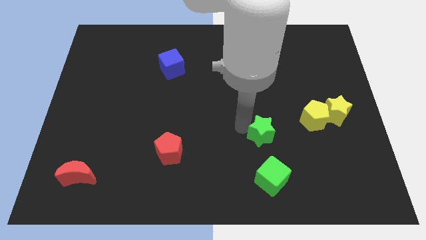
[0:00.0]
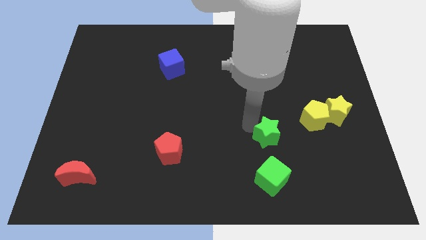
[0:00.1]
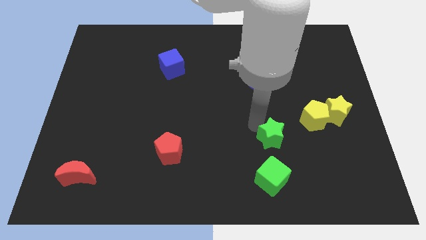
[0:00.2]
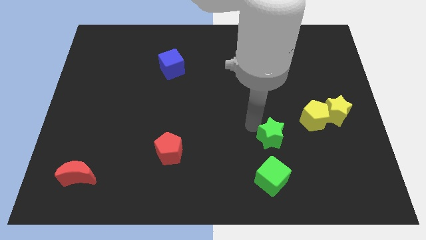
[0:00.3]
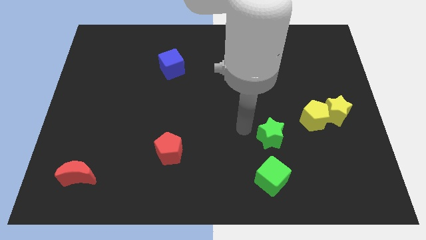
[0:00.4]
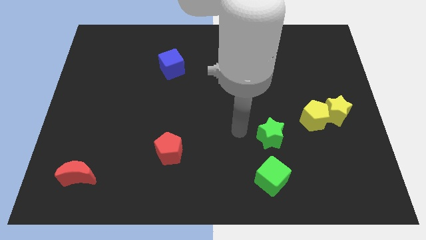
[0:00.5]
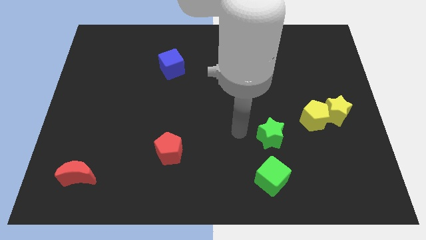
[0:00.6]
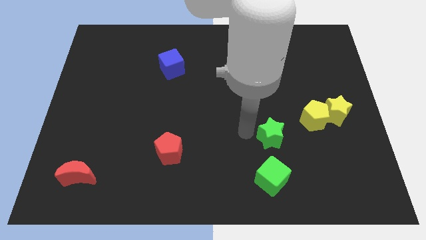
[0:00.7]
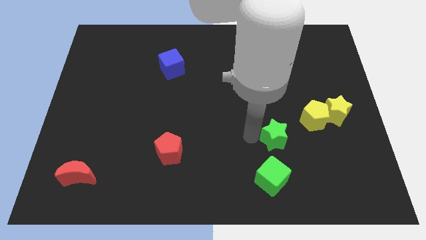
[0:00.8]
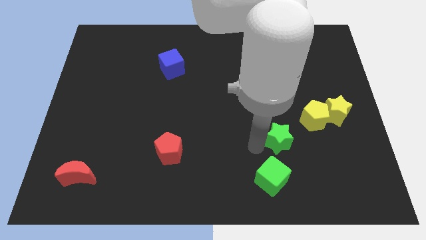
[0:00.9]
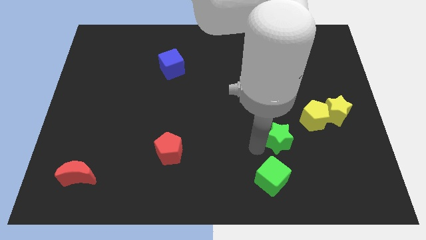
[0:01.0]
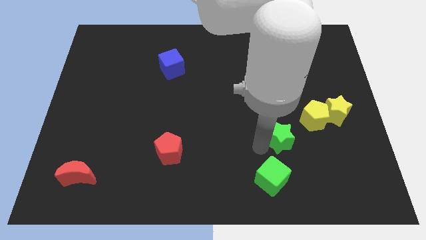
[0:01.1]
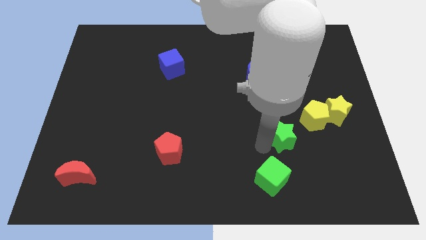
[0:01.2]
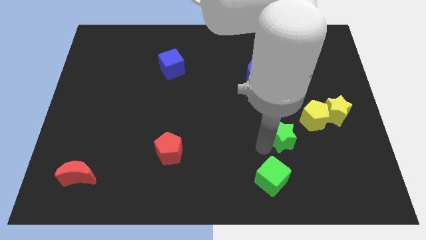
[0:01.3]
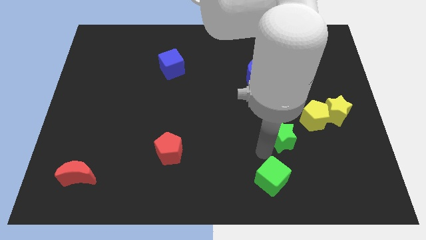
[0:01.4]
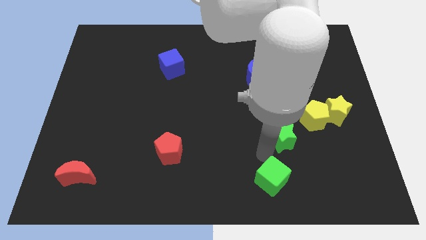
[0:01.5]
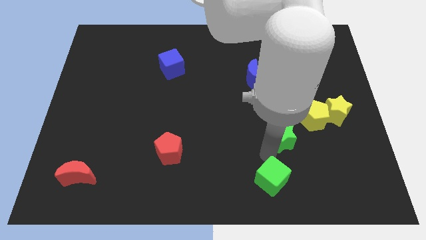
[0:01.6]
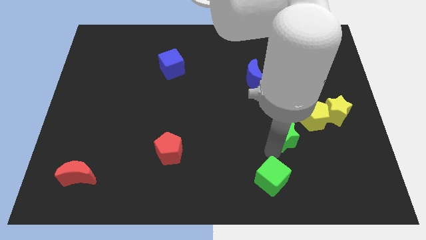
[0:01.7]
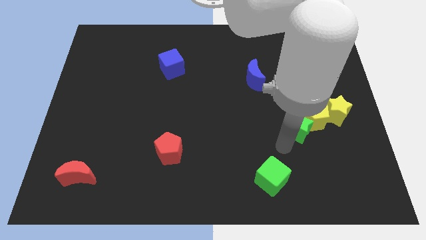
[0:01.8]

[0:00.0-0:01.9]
move green star into the yellow blocks

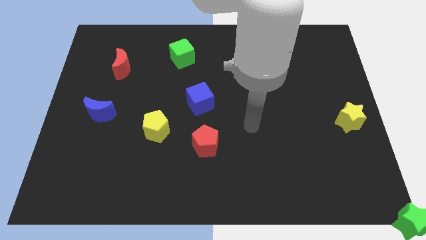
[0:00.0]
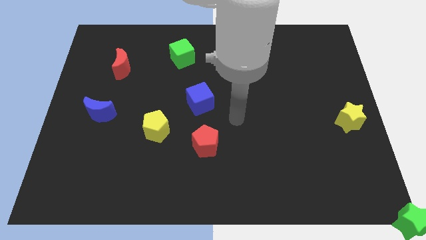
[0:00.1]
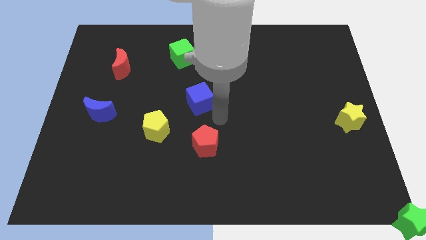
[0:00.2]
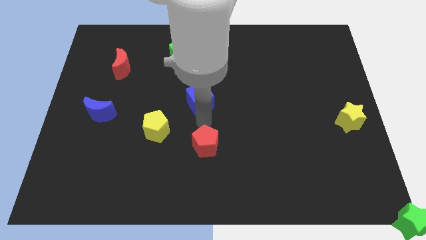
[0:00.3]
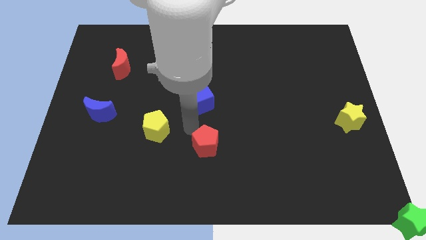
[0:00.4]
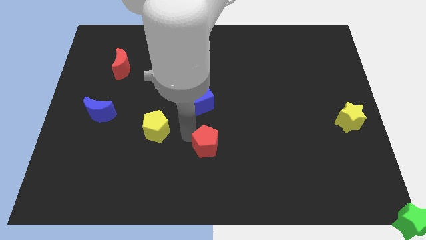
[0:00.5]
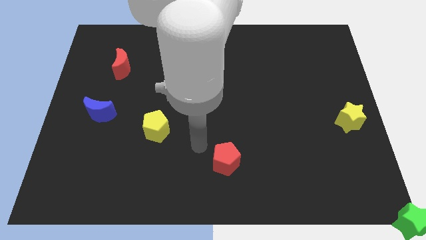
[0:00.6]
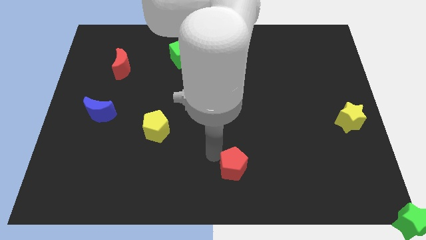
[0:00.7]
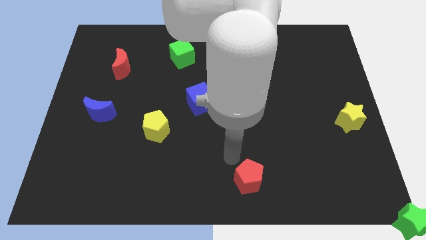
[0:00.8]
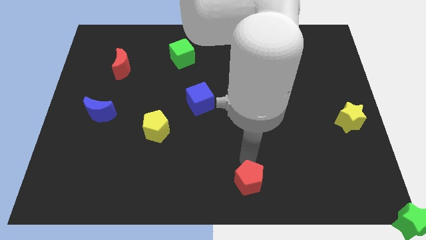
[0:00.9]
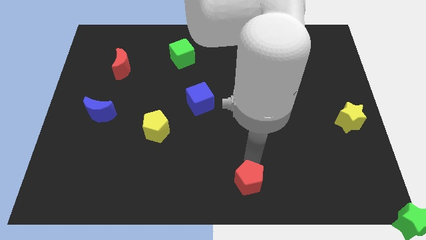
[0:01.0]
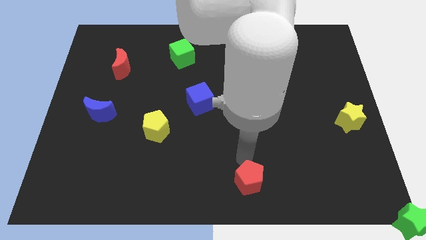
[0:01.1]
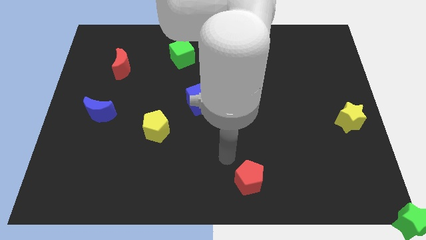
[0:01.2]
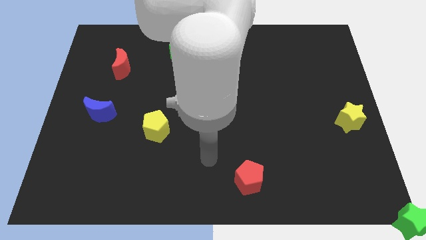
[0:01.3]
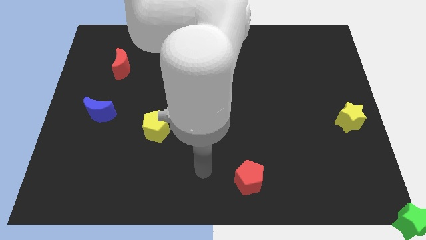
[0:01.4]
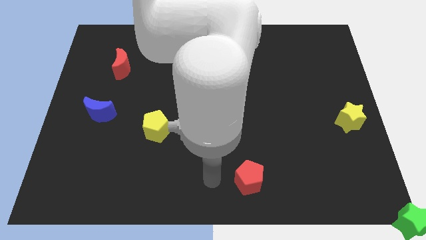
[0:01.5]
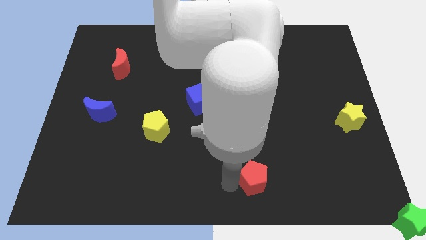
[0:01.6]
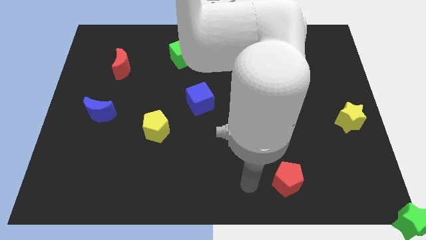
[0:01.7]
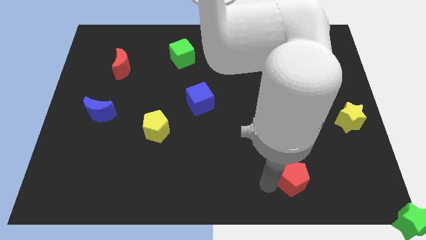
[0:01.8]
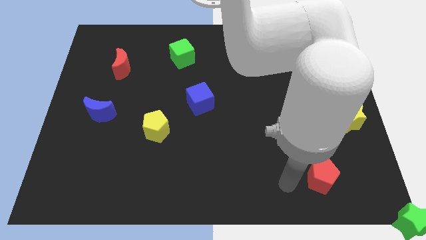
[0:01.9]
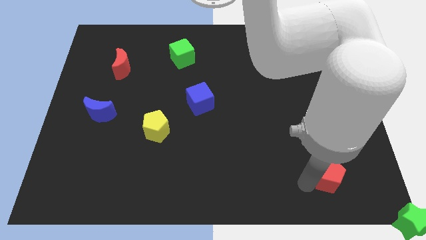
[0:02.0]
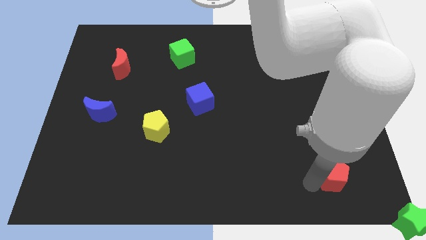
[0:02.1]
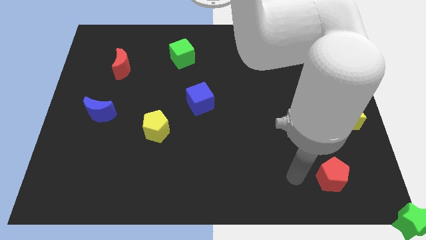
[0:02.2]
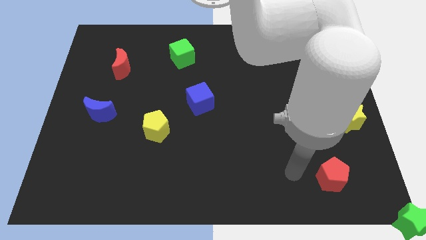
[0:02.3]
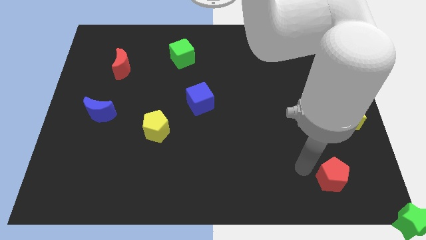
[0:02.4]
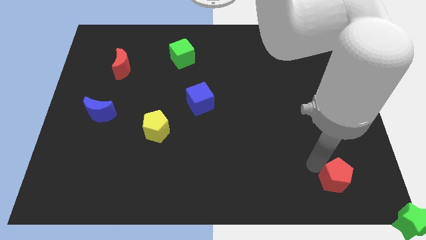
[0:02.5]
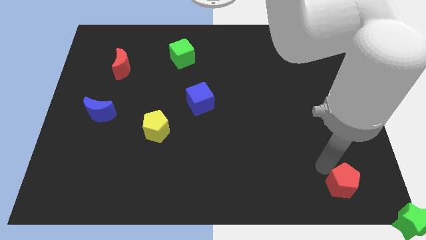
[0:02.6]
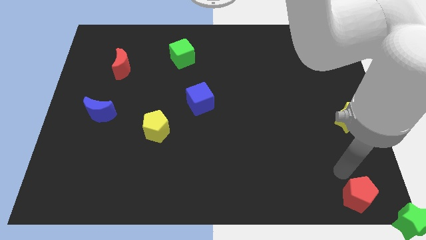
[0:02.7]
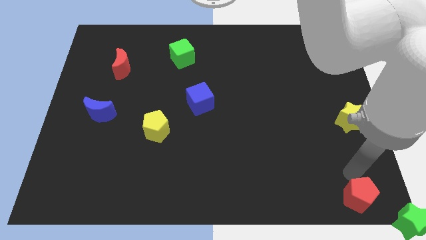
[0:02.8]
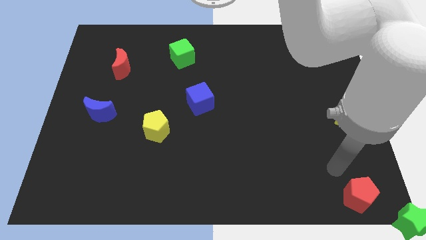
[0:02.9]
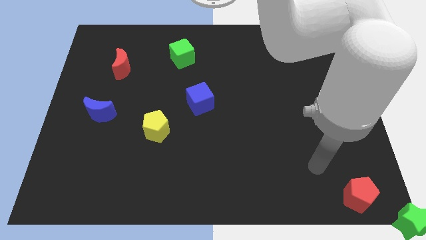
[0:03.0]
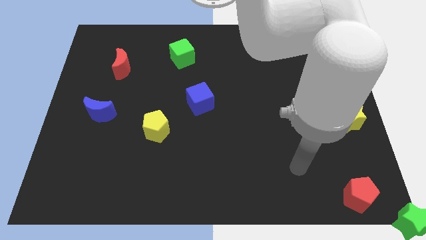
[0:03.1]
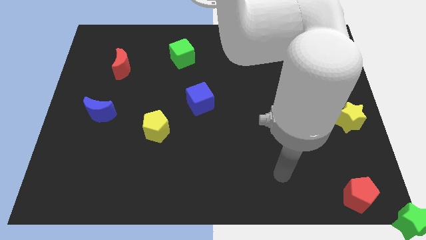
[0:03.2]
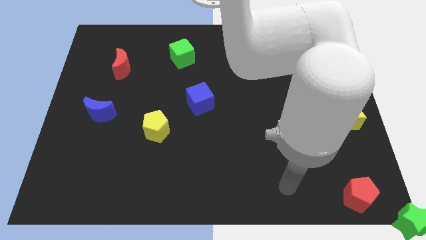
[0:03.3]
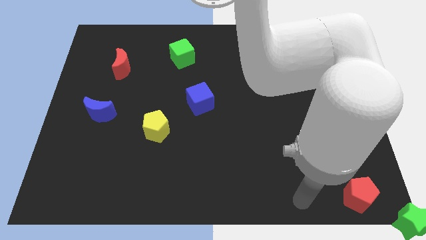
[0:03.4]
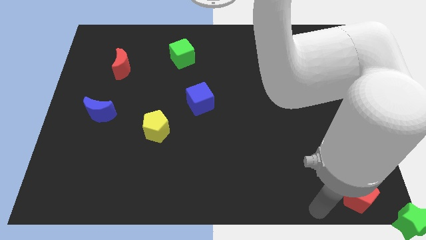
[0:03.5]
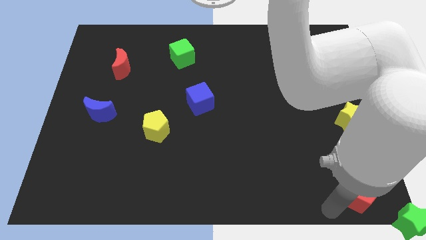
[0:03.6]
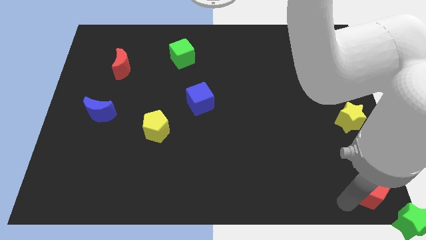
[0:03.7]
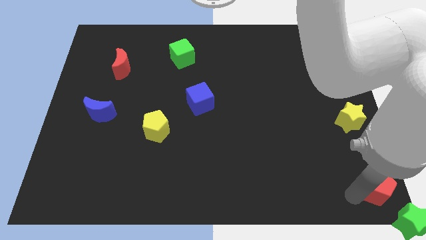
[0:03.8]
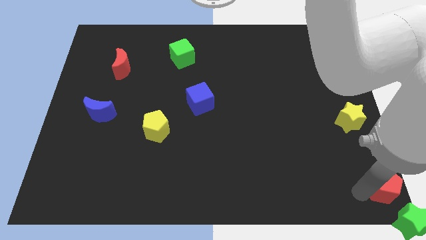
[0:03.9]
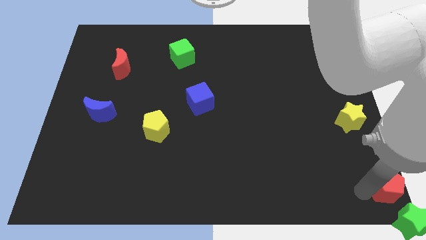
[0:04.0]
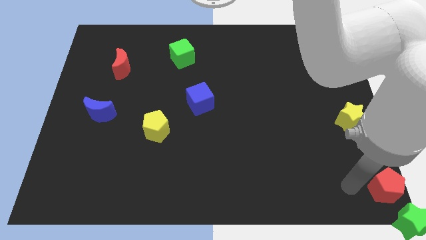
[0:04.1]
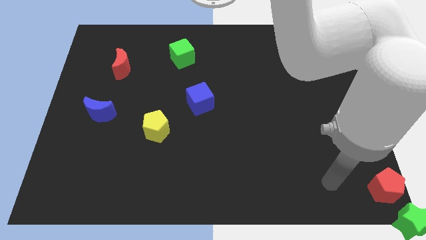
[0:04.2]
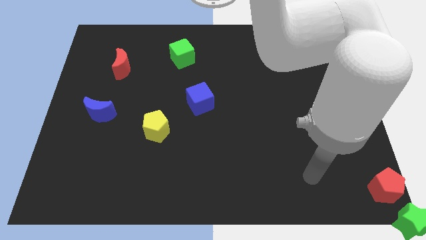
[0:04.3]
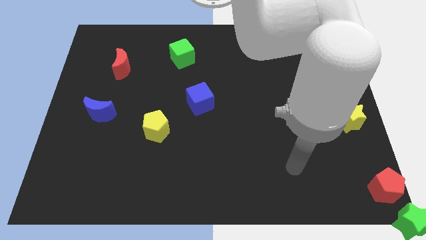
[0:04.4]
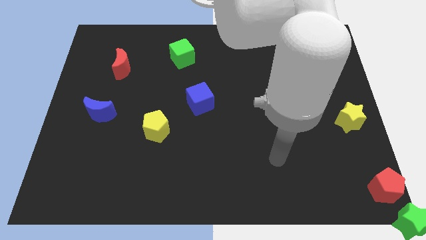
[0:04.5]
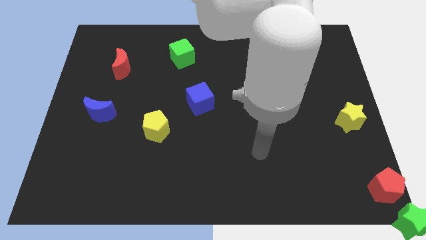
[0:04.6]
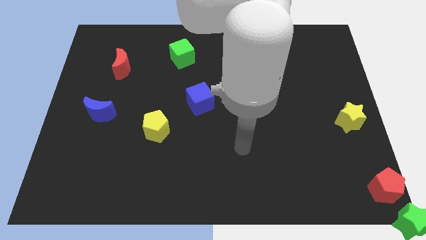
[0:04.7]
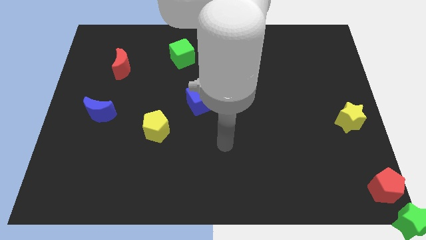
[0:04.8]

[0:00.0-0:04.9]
push the red pentagon to the bottom right

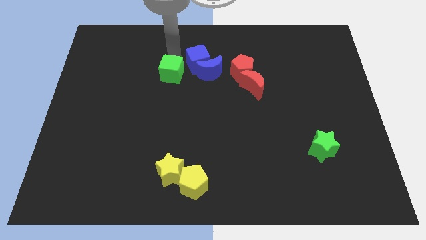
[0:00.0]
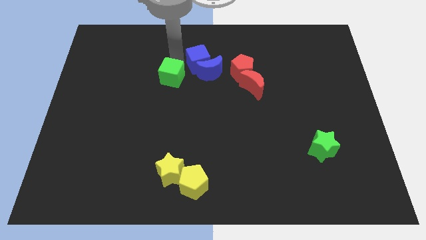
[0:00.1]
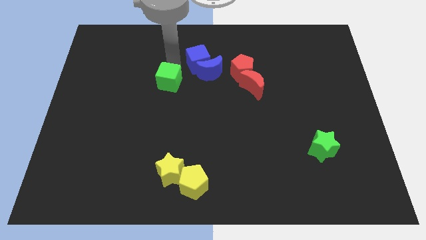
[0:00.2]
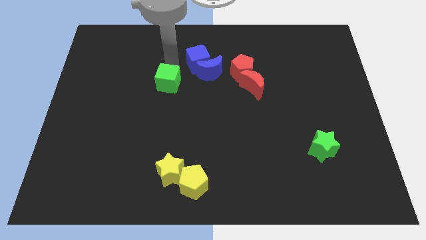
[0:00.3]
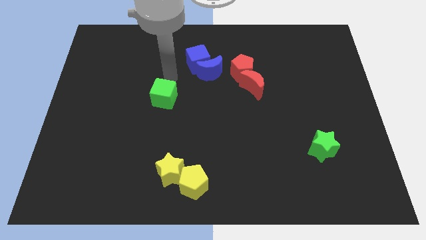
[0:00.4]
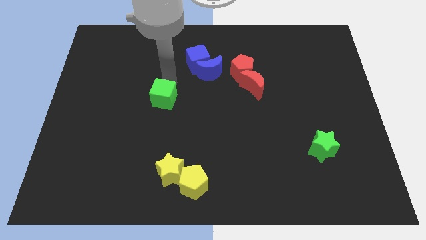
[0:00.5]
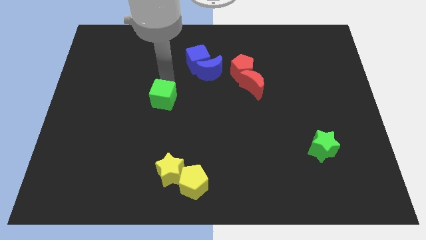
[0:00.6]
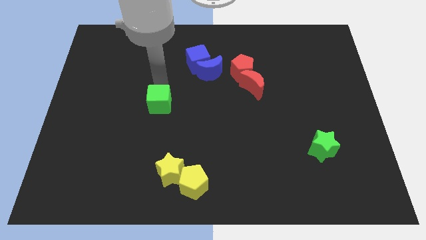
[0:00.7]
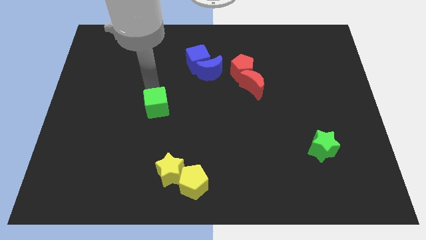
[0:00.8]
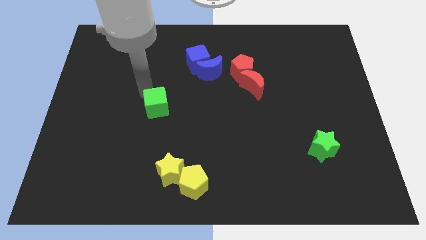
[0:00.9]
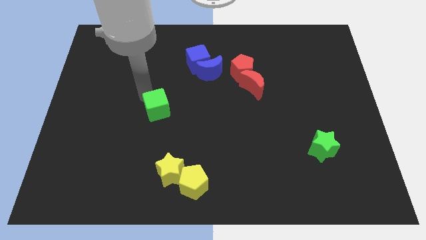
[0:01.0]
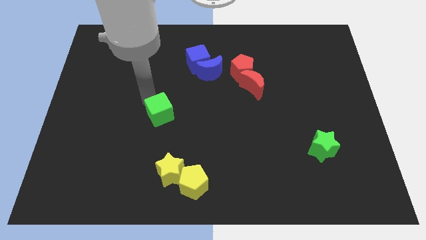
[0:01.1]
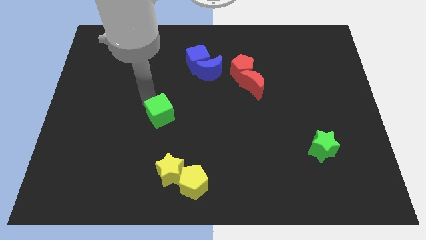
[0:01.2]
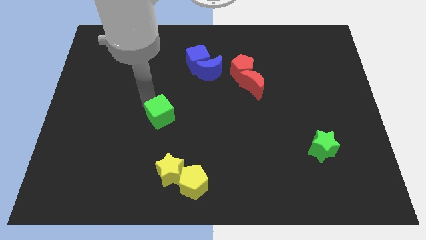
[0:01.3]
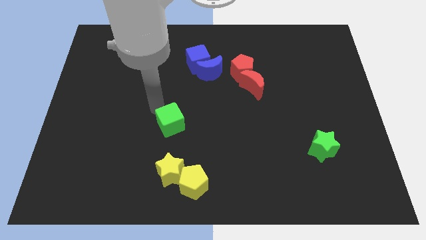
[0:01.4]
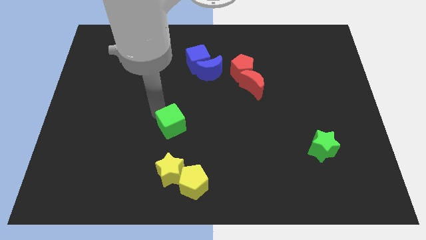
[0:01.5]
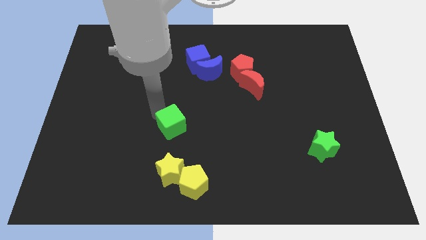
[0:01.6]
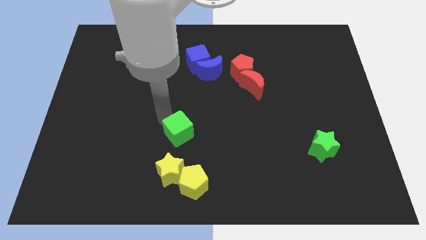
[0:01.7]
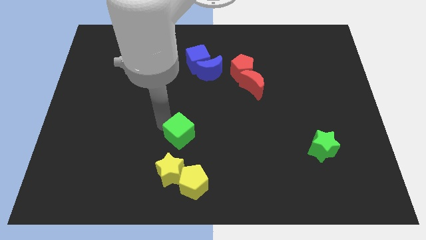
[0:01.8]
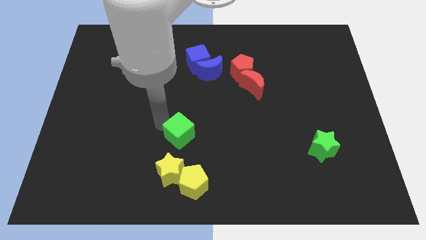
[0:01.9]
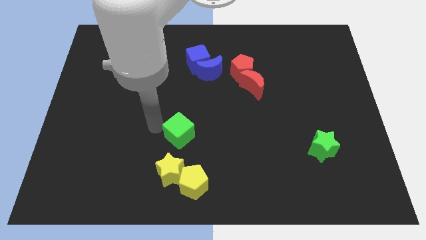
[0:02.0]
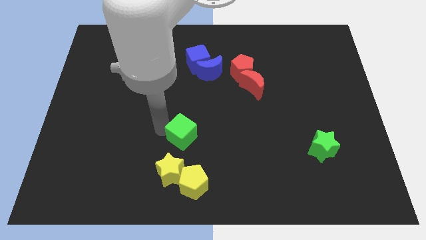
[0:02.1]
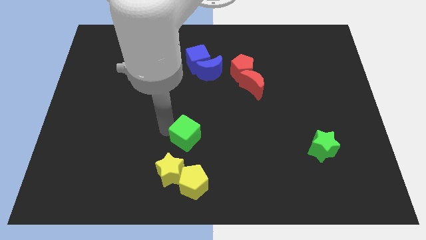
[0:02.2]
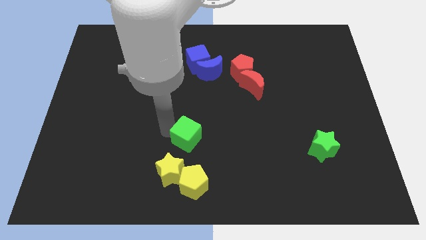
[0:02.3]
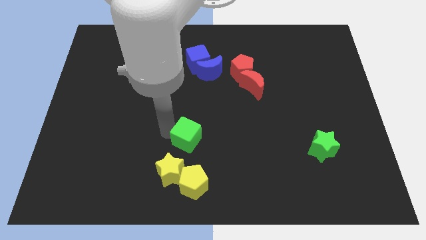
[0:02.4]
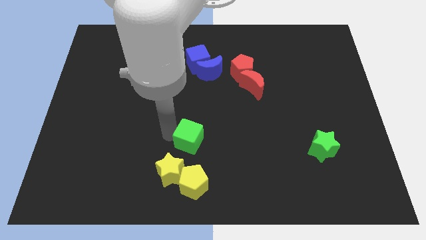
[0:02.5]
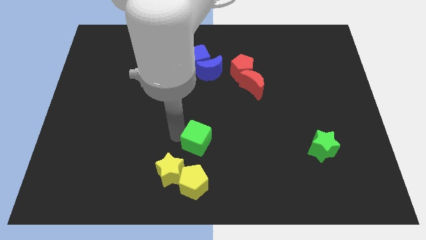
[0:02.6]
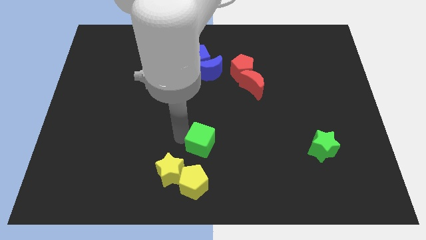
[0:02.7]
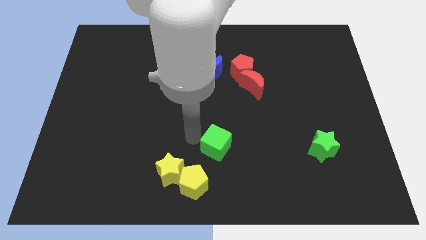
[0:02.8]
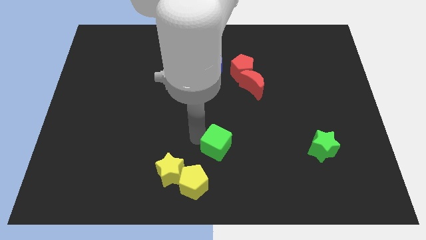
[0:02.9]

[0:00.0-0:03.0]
push the green cube to the top right of the yellow pentagon
